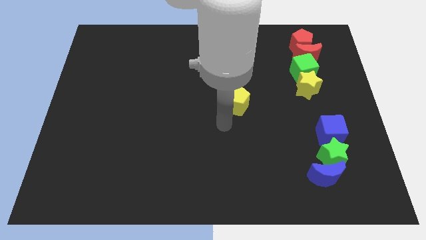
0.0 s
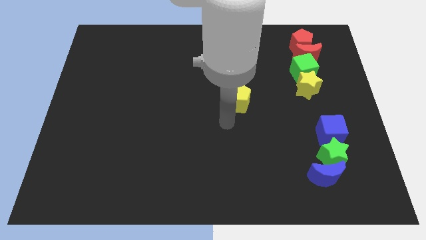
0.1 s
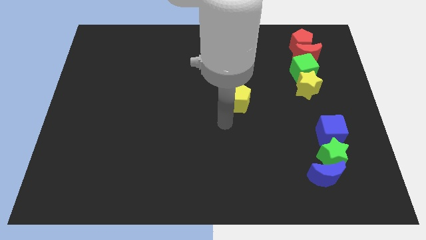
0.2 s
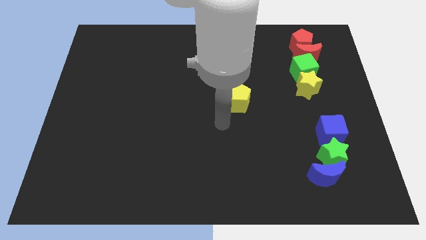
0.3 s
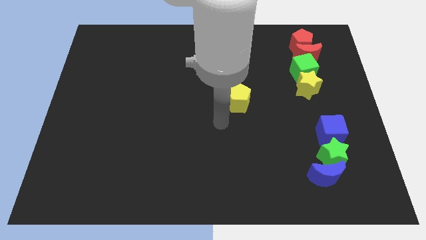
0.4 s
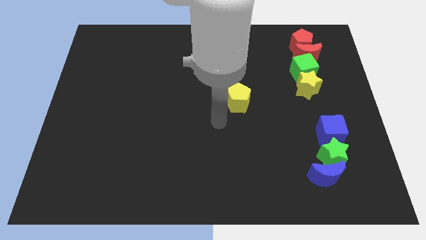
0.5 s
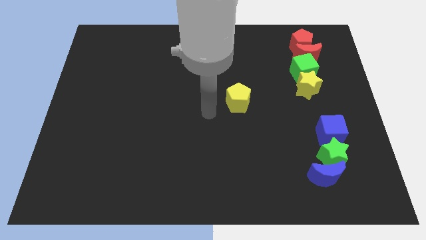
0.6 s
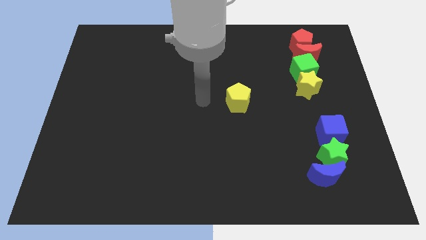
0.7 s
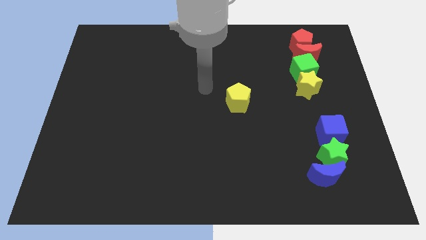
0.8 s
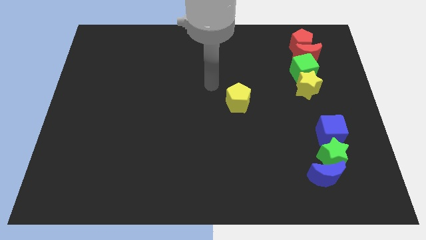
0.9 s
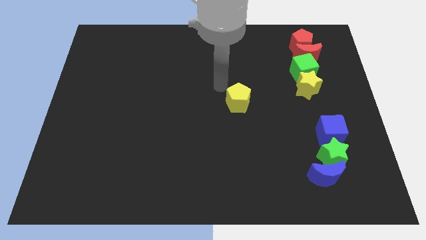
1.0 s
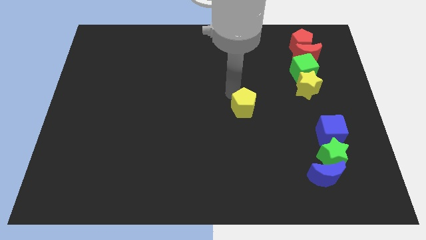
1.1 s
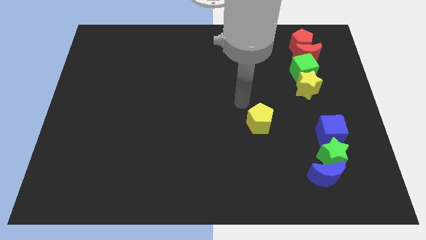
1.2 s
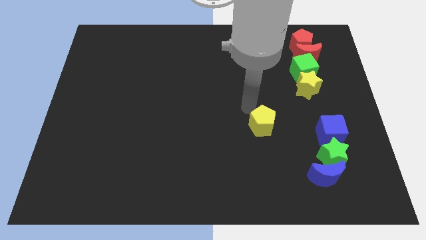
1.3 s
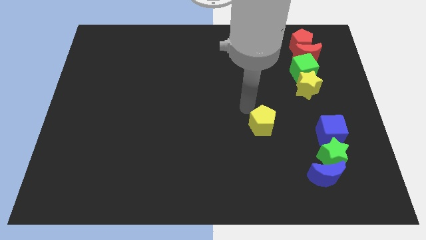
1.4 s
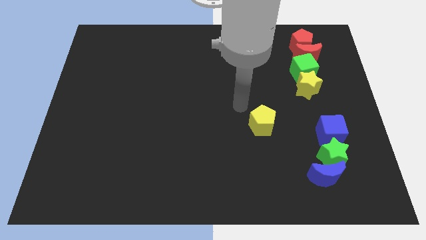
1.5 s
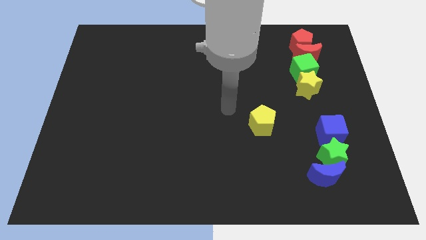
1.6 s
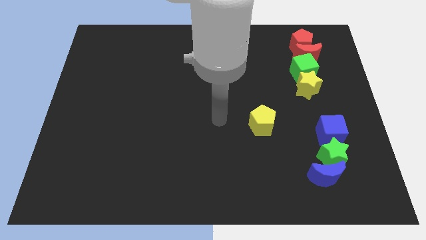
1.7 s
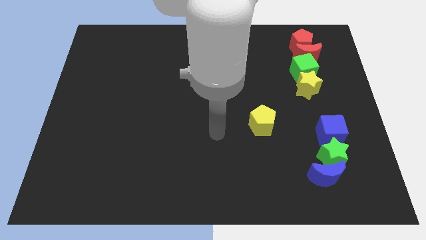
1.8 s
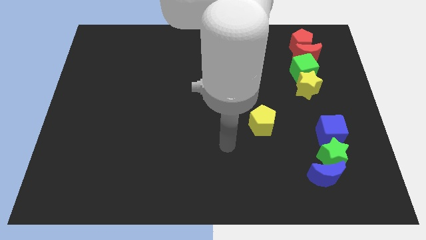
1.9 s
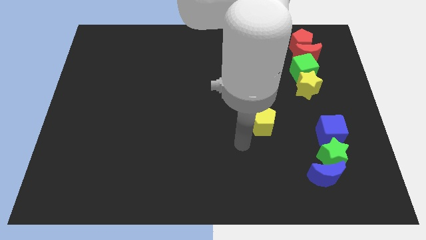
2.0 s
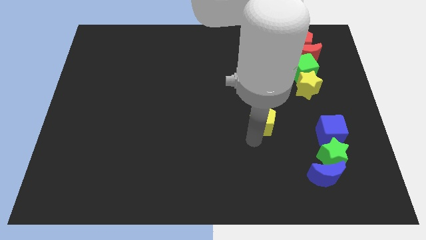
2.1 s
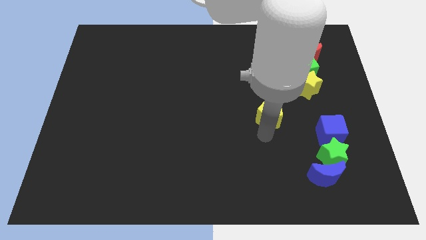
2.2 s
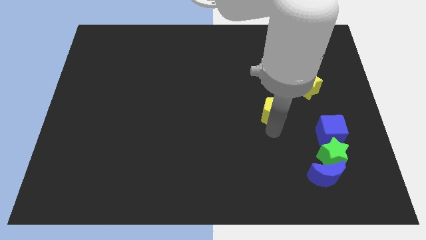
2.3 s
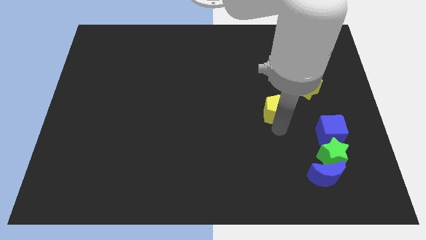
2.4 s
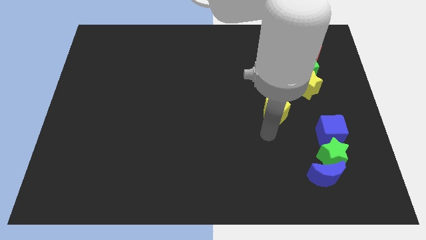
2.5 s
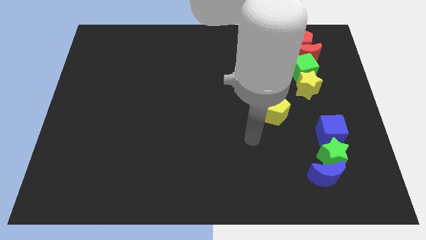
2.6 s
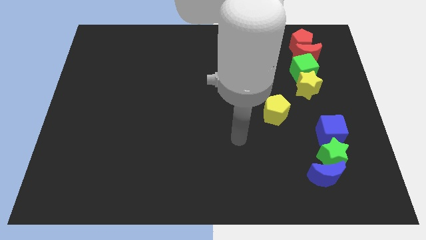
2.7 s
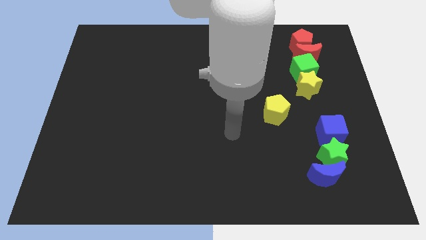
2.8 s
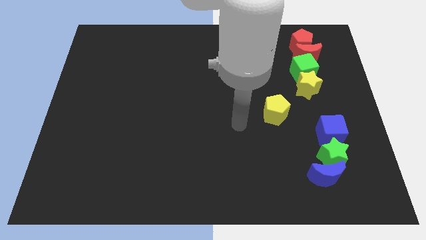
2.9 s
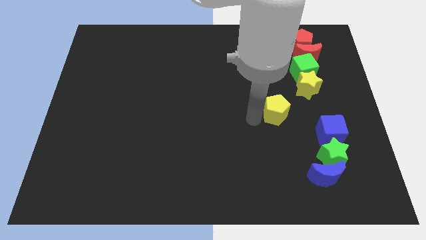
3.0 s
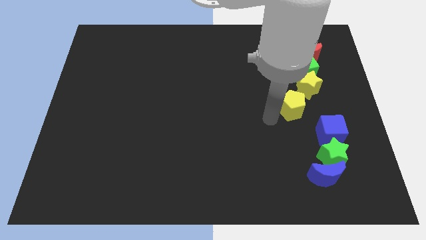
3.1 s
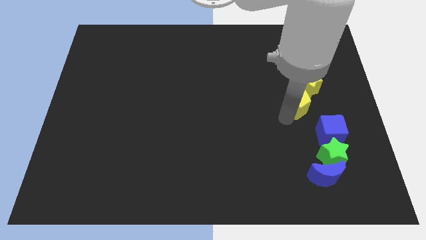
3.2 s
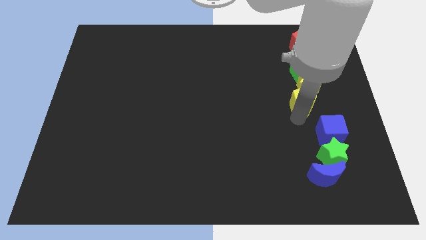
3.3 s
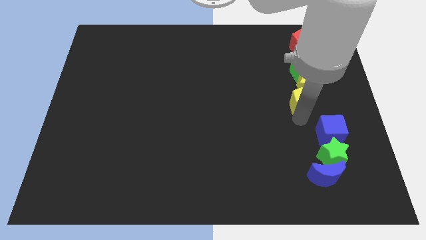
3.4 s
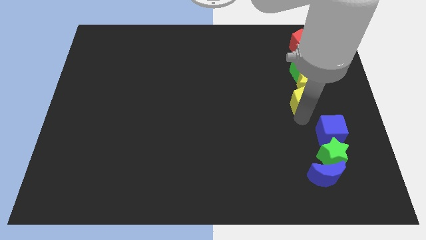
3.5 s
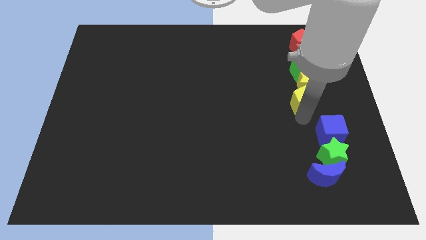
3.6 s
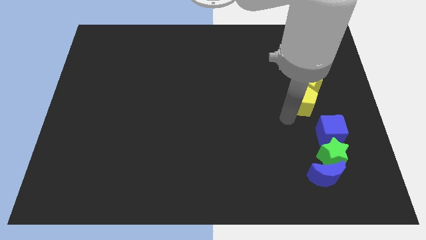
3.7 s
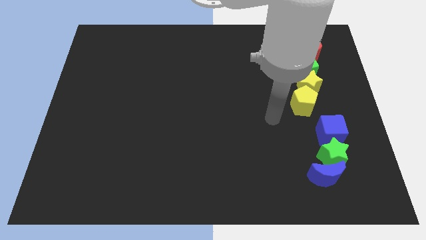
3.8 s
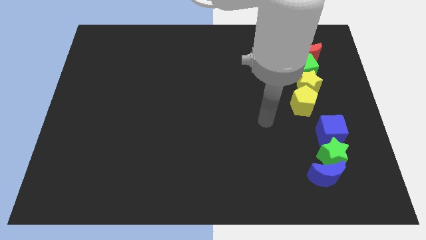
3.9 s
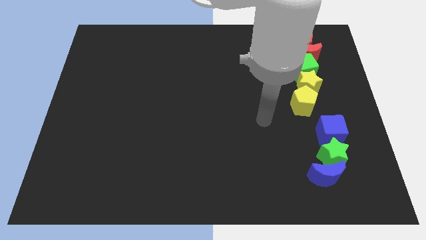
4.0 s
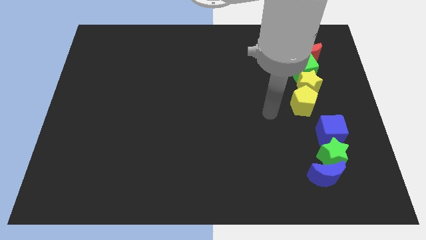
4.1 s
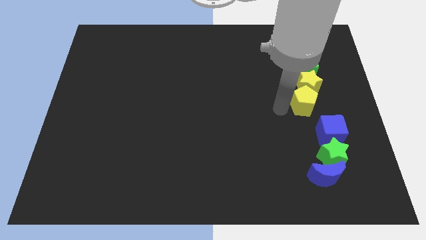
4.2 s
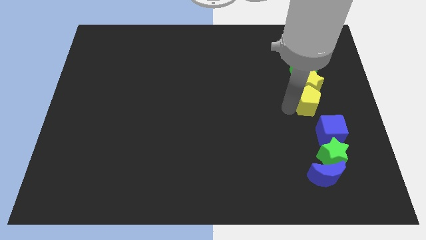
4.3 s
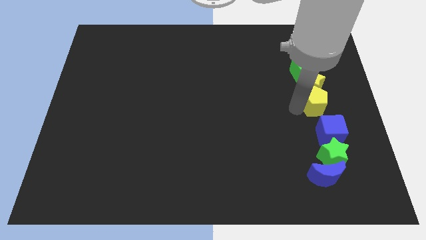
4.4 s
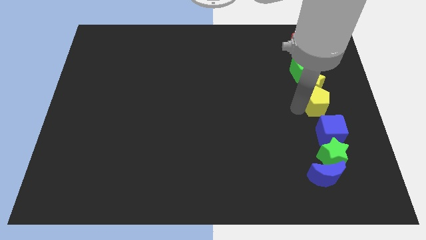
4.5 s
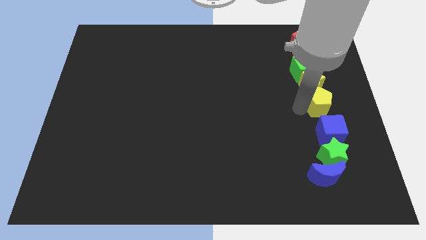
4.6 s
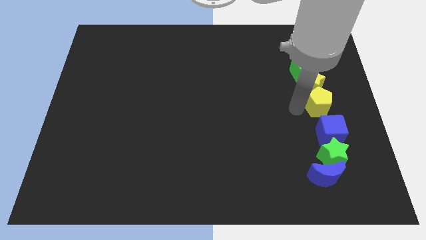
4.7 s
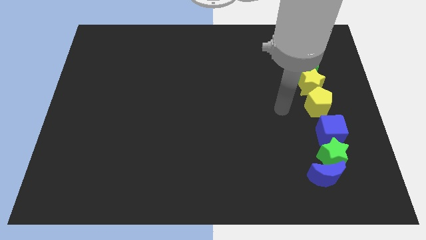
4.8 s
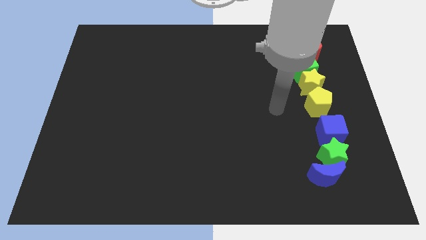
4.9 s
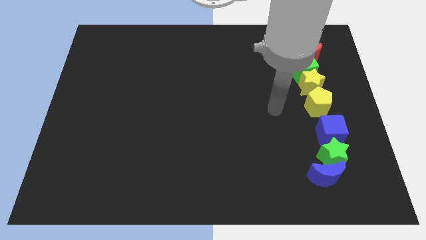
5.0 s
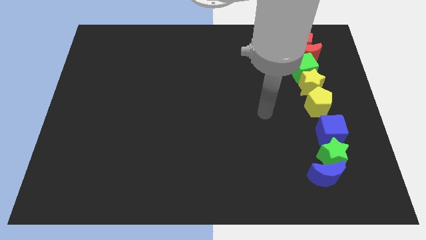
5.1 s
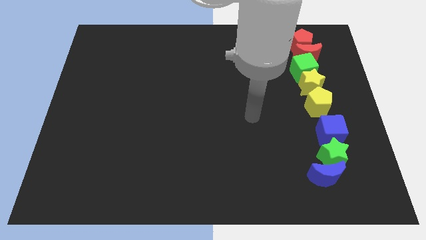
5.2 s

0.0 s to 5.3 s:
place the yellow pentagon in between yellow star and blue cube

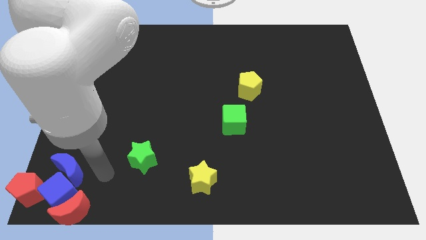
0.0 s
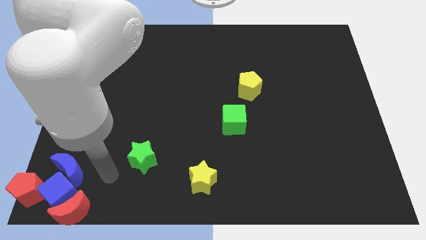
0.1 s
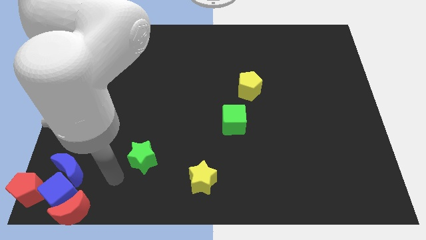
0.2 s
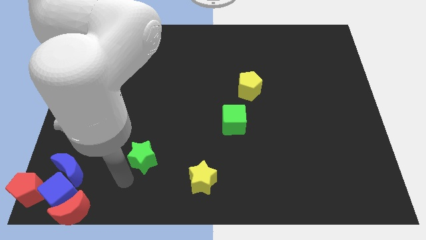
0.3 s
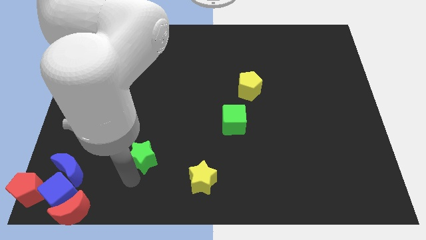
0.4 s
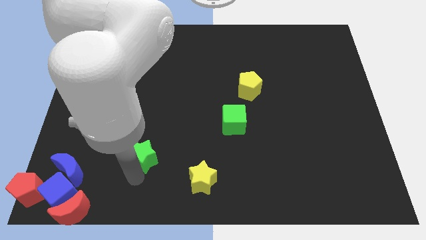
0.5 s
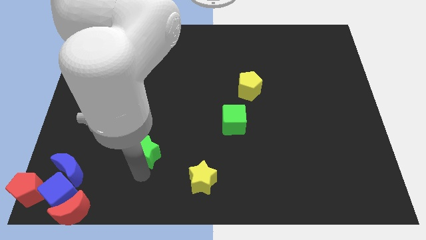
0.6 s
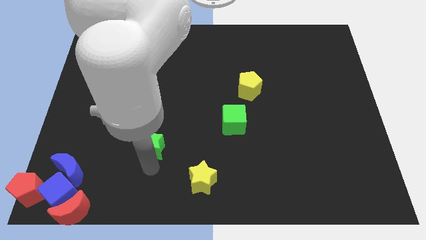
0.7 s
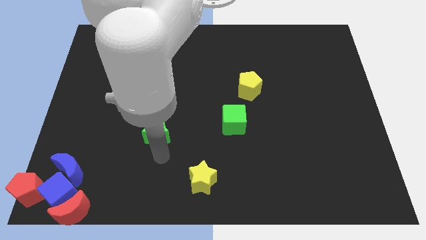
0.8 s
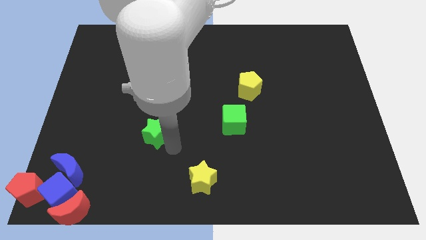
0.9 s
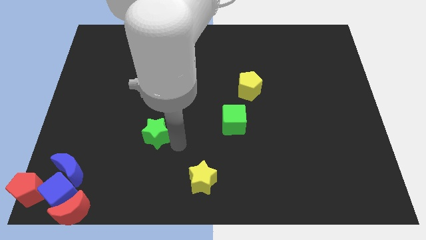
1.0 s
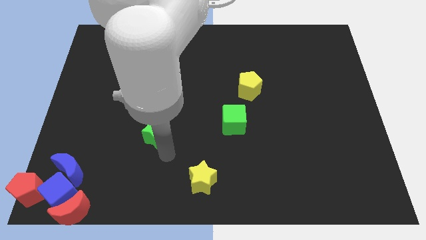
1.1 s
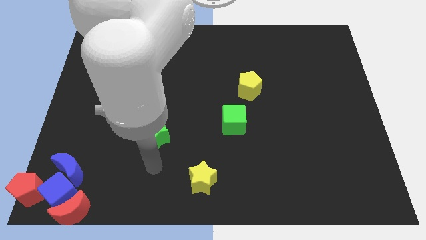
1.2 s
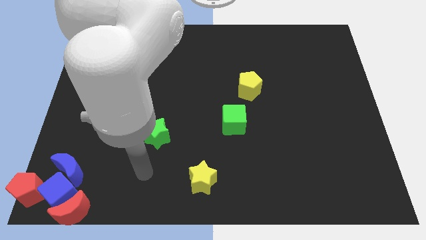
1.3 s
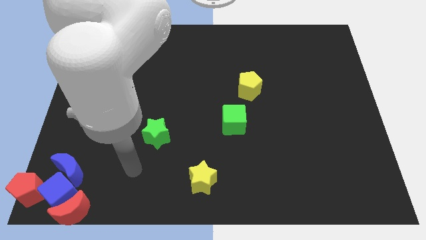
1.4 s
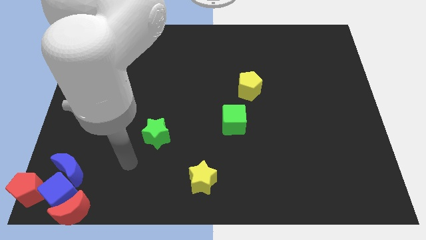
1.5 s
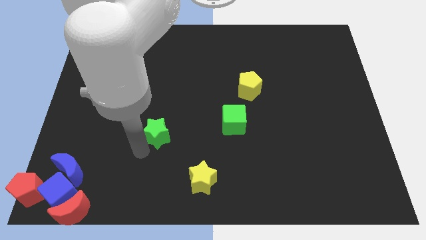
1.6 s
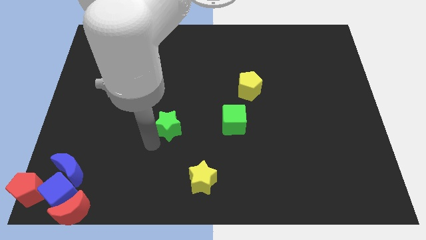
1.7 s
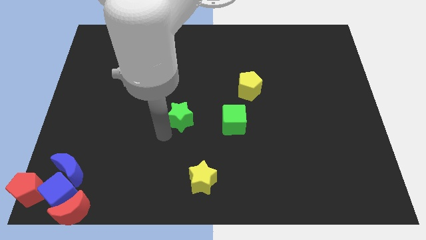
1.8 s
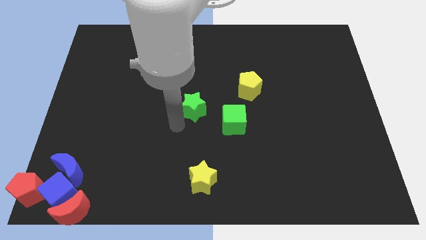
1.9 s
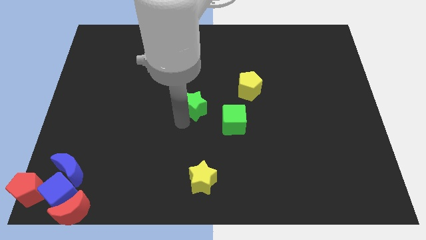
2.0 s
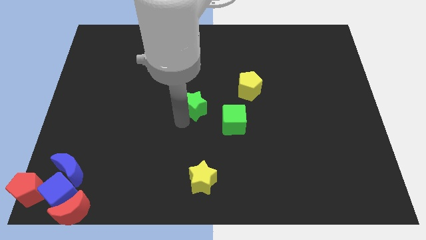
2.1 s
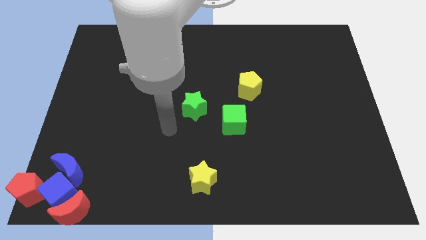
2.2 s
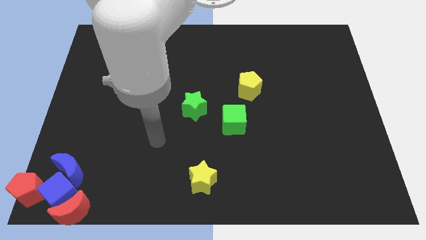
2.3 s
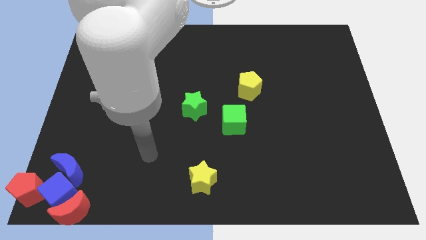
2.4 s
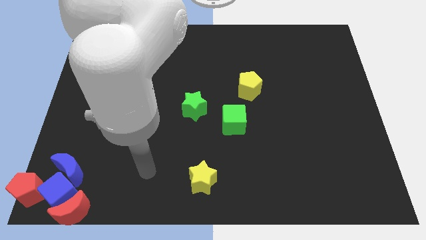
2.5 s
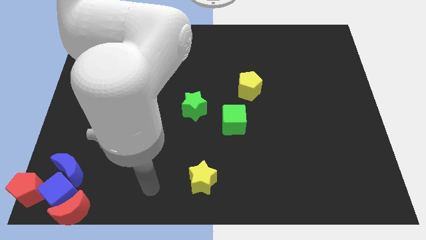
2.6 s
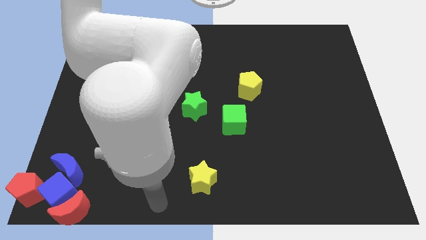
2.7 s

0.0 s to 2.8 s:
push the green star diagonally top left to green cube

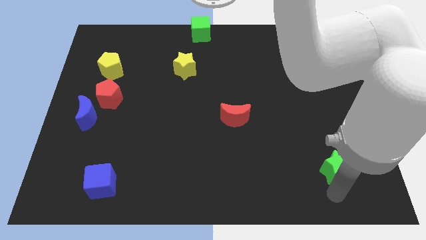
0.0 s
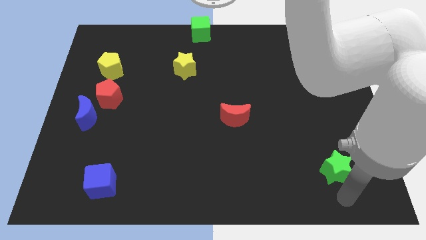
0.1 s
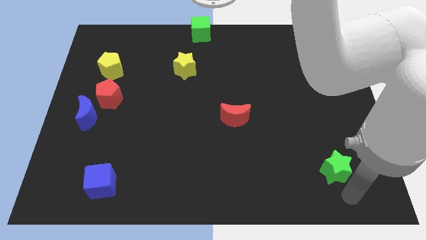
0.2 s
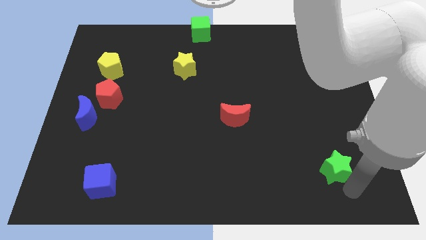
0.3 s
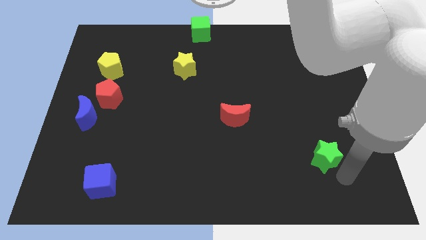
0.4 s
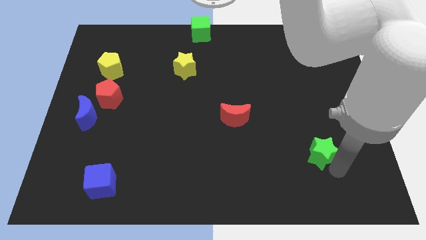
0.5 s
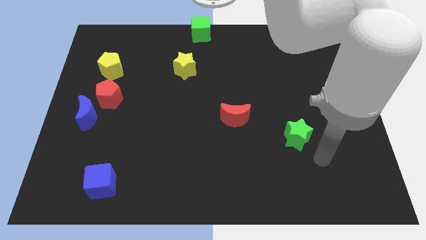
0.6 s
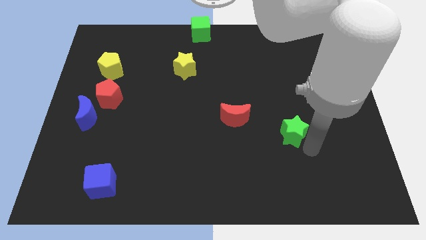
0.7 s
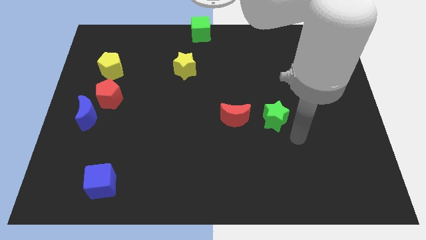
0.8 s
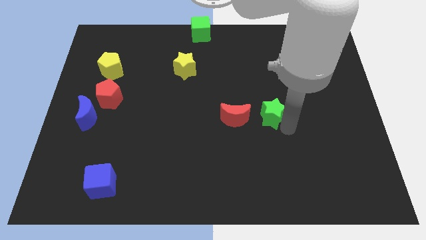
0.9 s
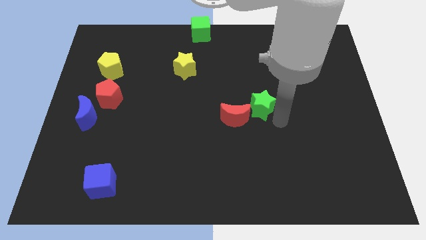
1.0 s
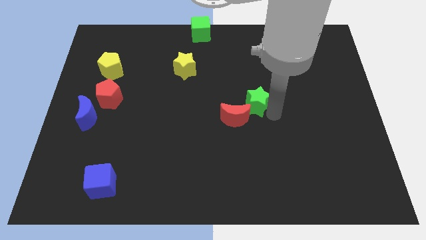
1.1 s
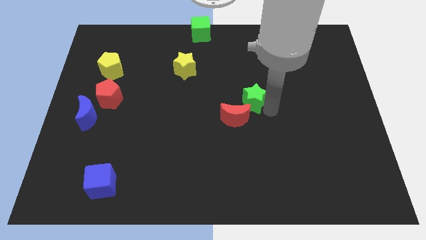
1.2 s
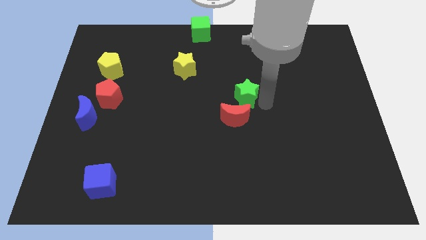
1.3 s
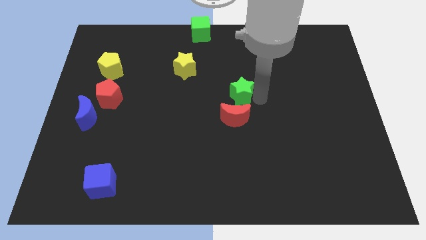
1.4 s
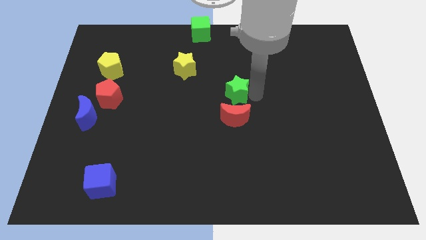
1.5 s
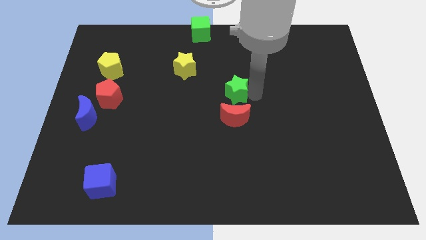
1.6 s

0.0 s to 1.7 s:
pull the green star above the red crescent
